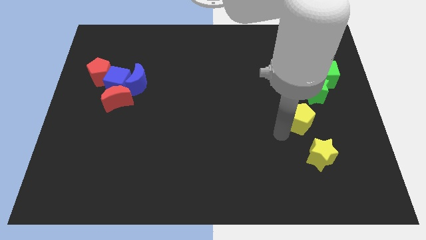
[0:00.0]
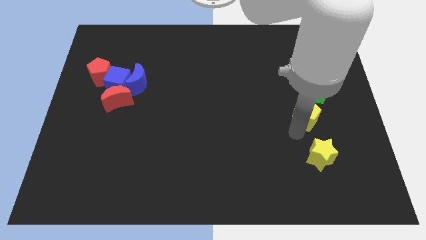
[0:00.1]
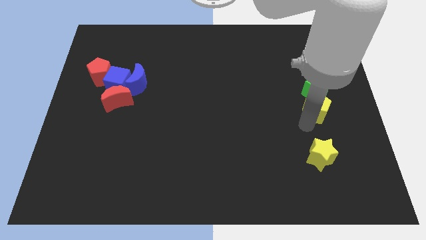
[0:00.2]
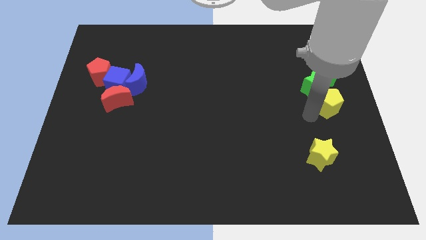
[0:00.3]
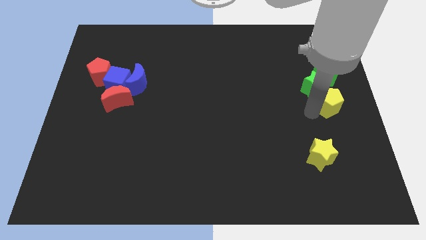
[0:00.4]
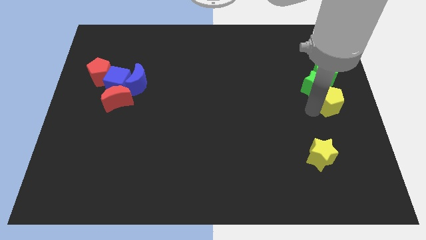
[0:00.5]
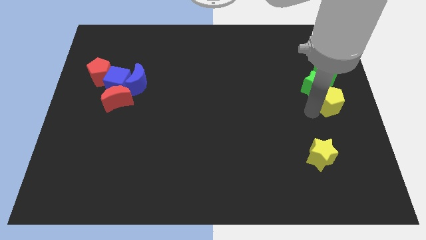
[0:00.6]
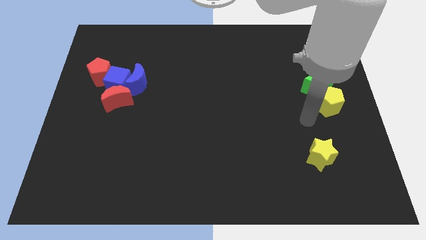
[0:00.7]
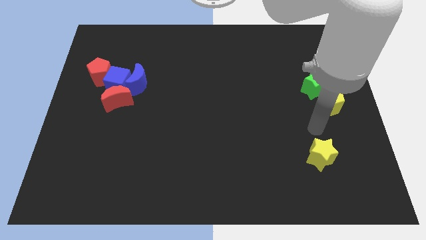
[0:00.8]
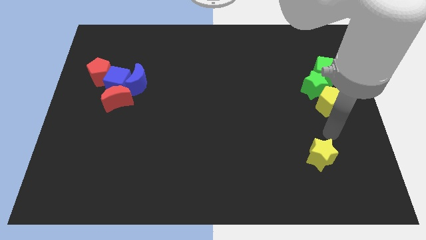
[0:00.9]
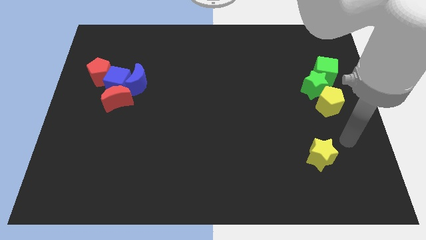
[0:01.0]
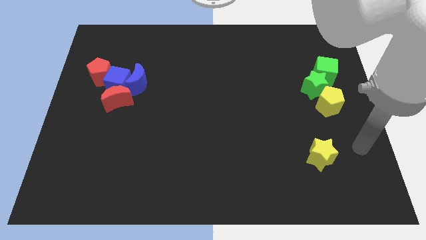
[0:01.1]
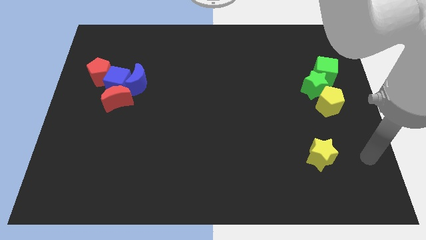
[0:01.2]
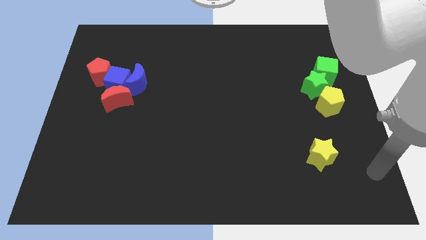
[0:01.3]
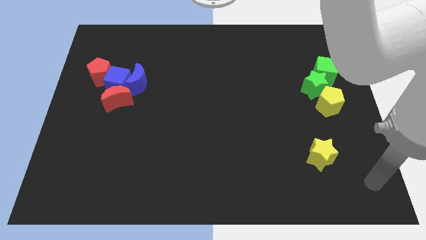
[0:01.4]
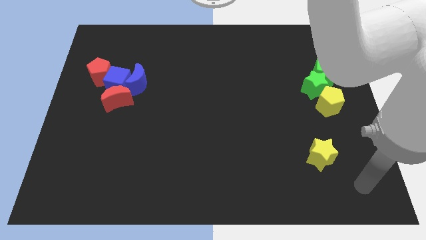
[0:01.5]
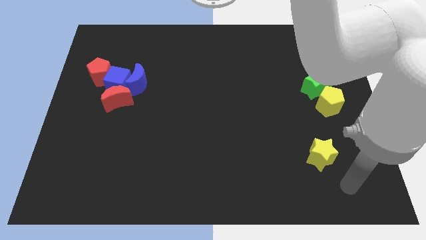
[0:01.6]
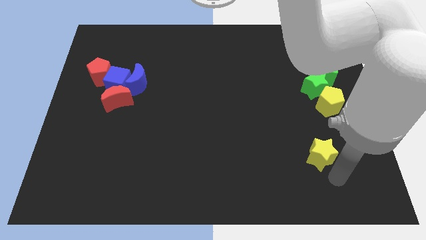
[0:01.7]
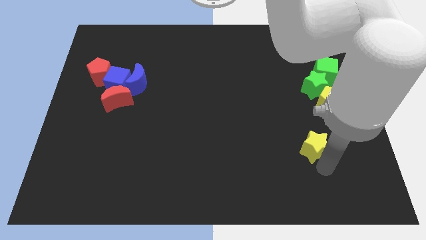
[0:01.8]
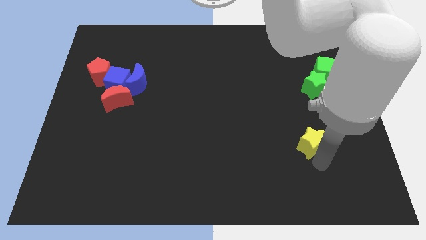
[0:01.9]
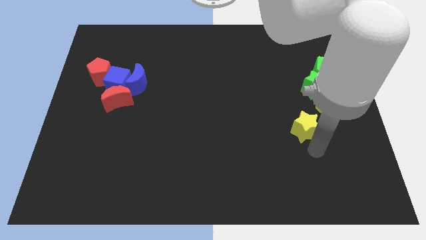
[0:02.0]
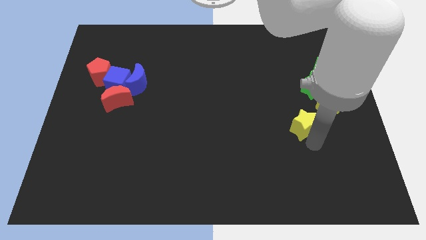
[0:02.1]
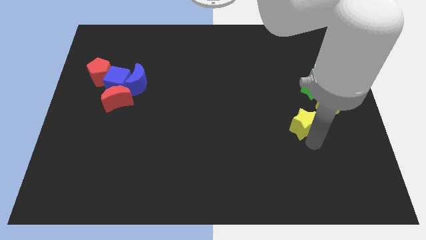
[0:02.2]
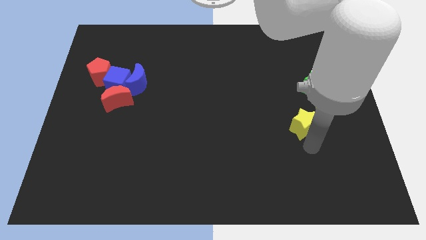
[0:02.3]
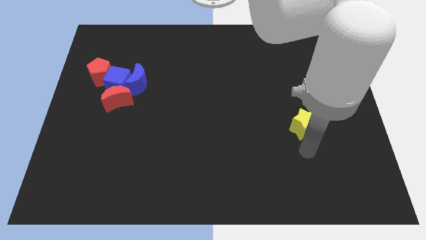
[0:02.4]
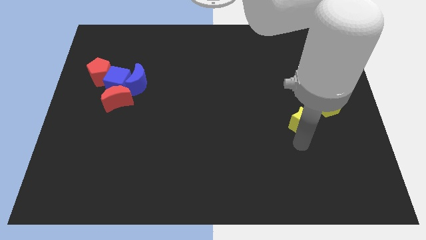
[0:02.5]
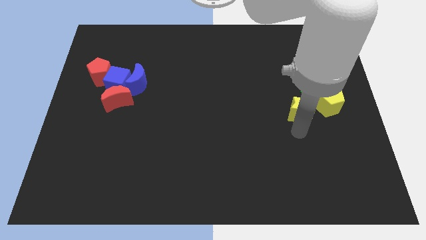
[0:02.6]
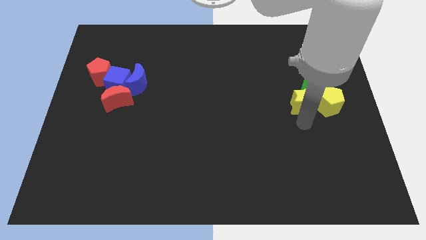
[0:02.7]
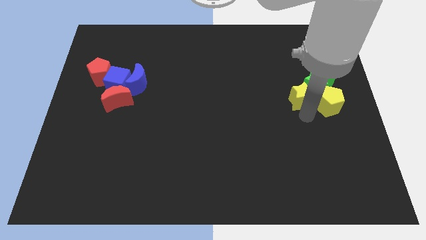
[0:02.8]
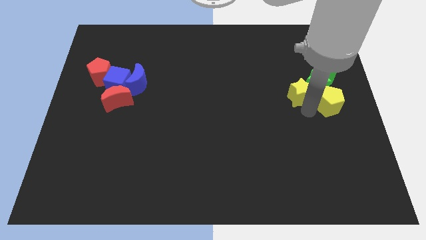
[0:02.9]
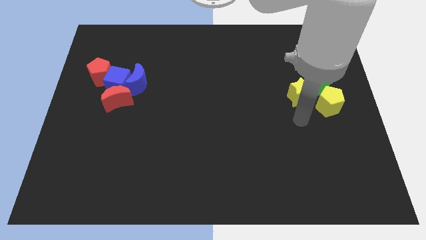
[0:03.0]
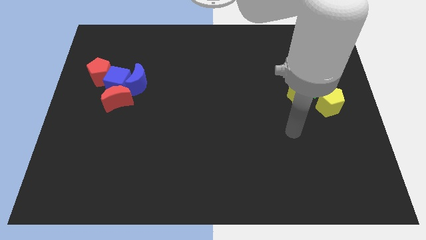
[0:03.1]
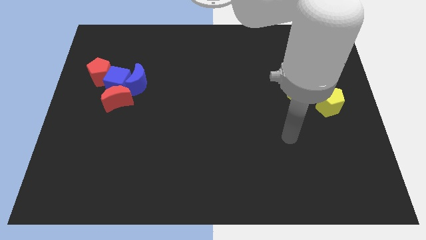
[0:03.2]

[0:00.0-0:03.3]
add the yellow blocks to the green blocks to form a group of blocks

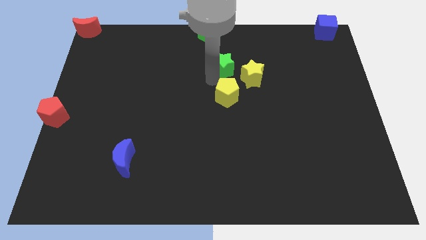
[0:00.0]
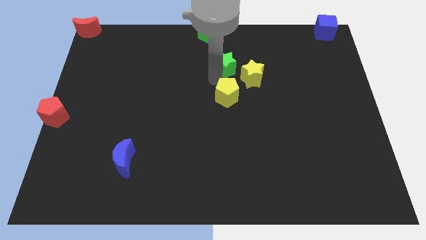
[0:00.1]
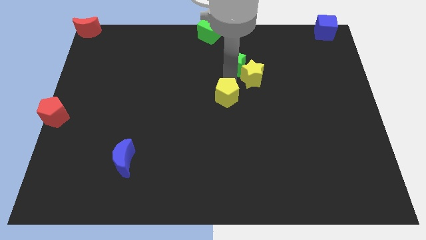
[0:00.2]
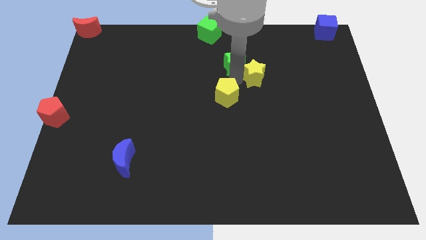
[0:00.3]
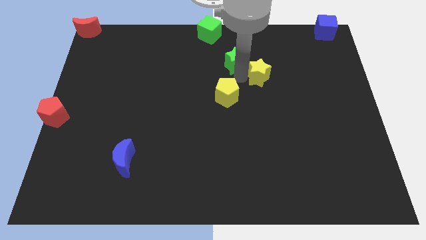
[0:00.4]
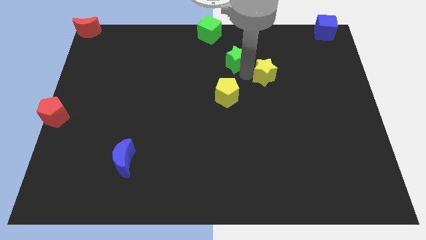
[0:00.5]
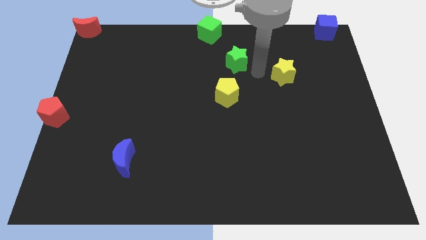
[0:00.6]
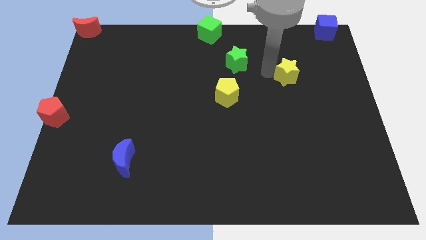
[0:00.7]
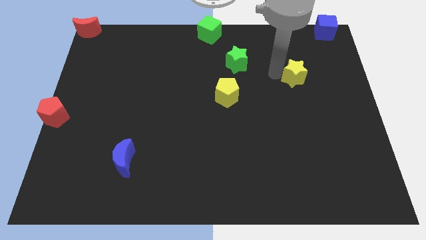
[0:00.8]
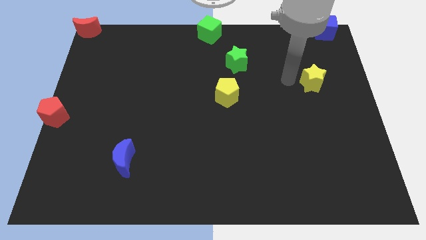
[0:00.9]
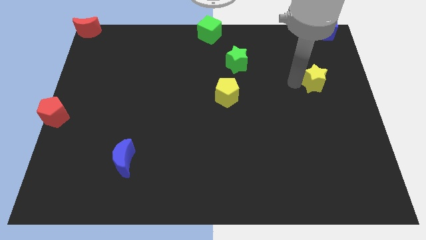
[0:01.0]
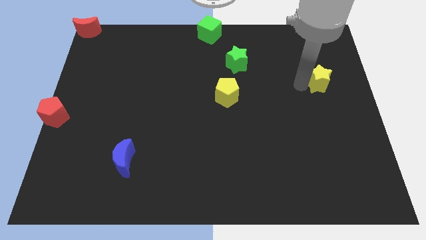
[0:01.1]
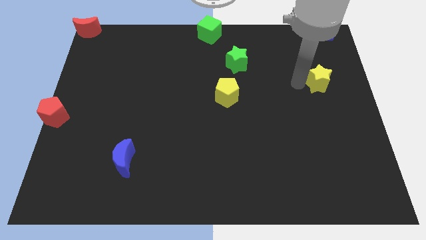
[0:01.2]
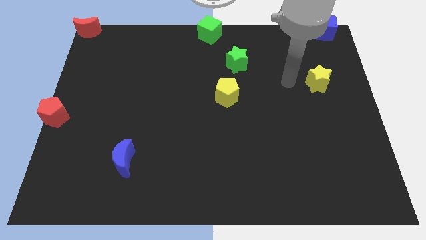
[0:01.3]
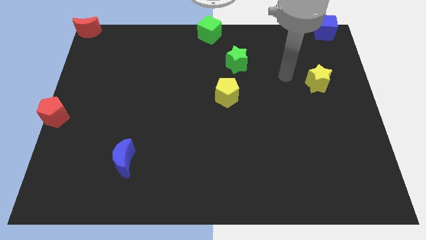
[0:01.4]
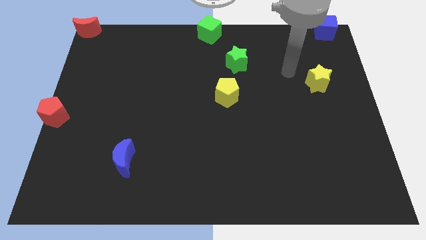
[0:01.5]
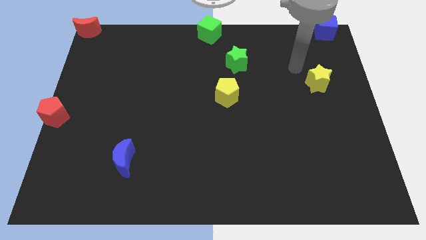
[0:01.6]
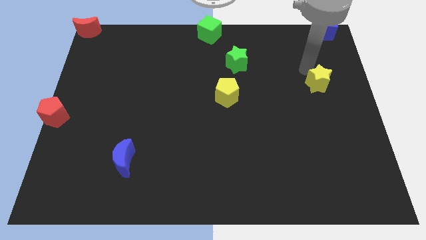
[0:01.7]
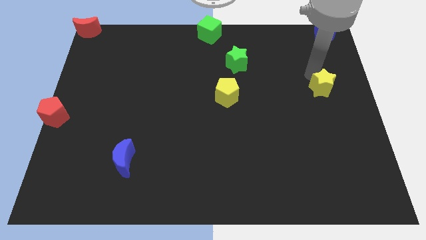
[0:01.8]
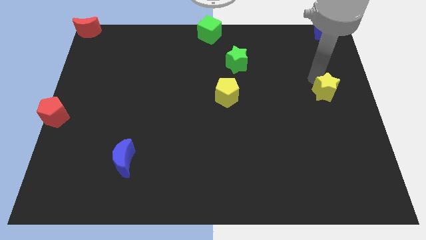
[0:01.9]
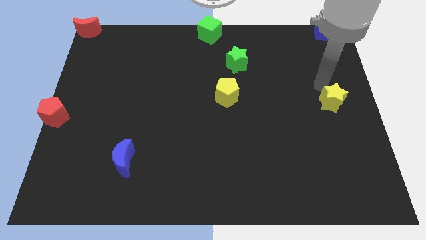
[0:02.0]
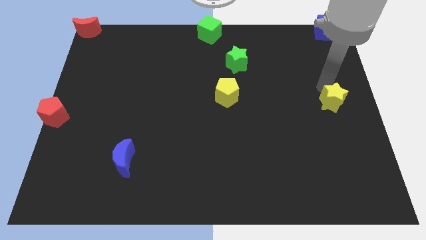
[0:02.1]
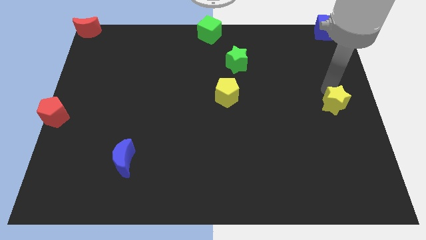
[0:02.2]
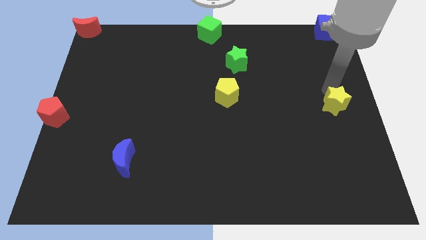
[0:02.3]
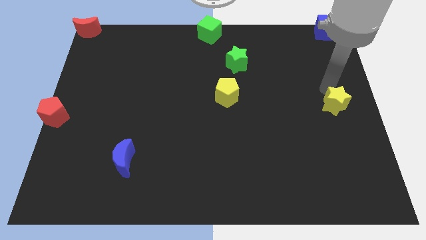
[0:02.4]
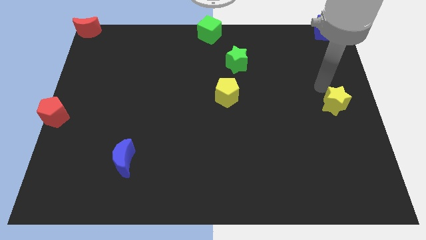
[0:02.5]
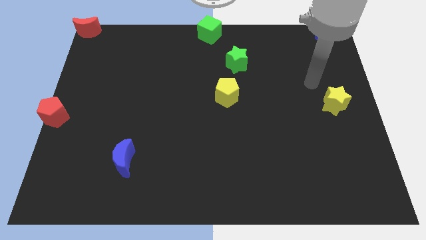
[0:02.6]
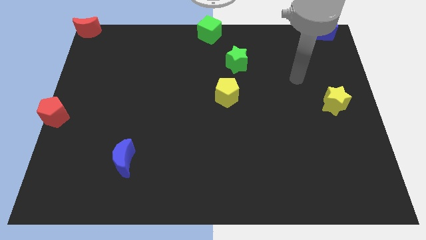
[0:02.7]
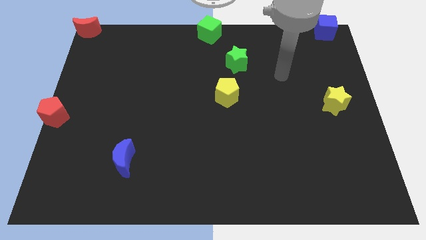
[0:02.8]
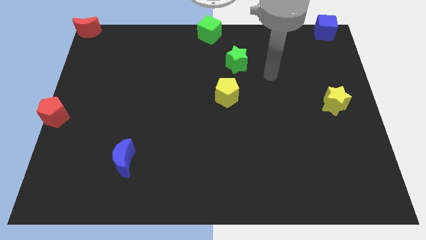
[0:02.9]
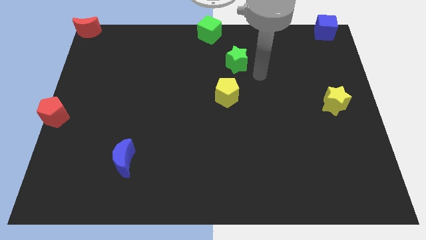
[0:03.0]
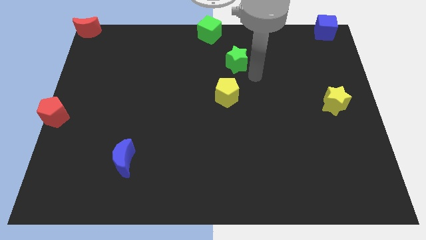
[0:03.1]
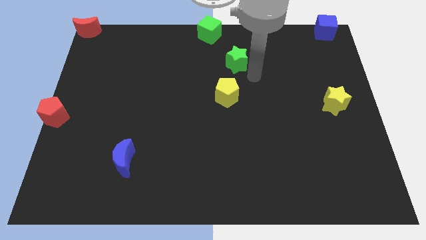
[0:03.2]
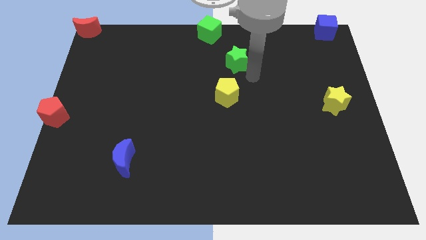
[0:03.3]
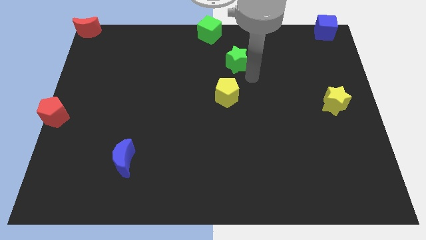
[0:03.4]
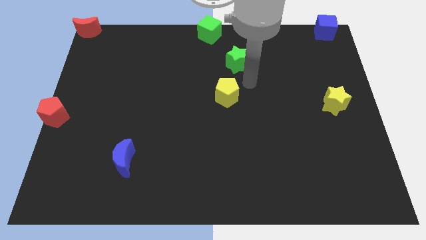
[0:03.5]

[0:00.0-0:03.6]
place the yellow star to the right centre of the board by seperating it from green star

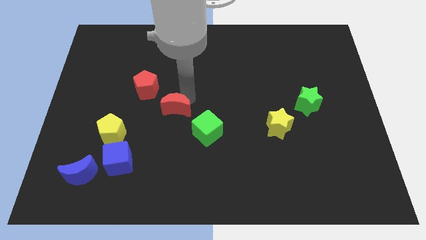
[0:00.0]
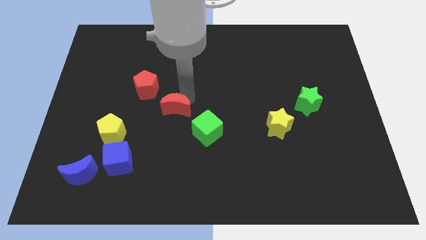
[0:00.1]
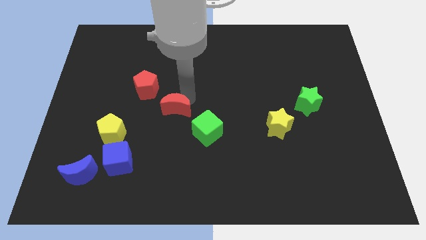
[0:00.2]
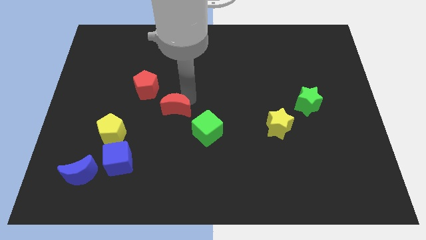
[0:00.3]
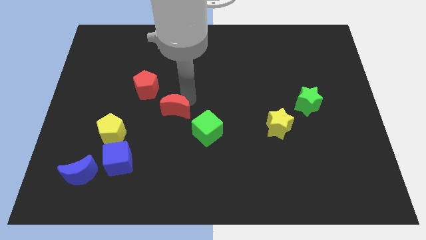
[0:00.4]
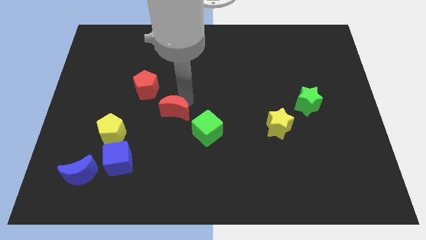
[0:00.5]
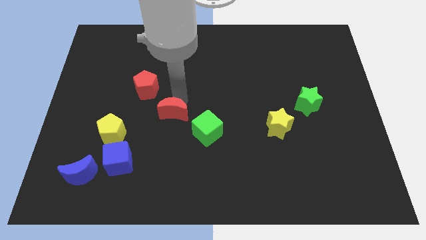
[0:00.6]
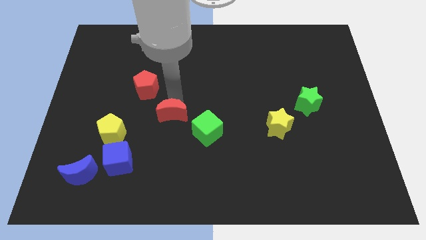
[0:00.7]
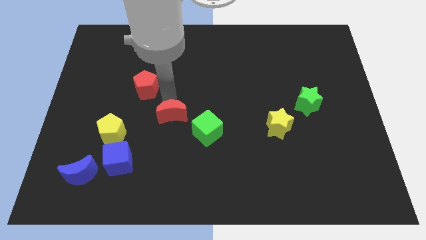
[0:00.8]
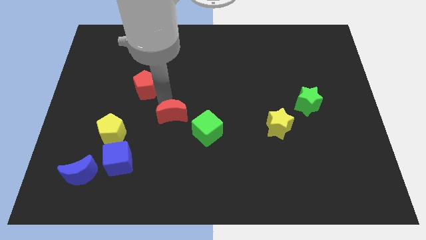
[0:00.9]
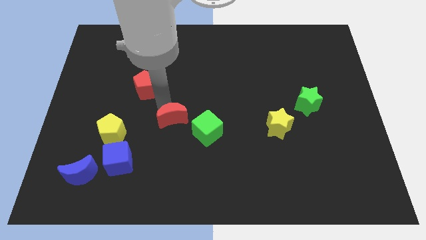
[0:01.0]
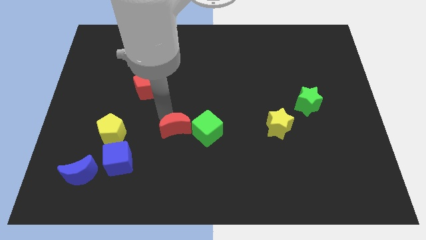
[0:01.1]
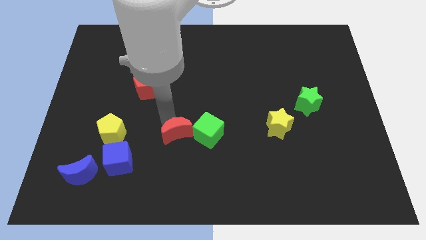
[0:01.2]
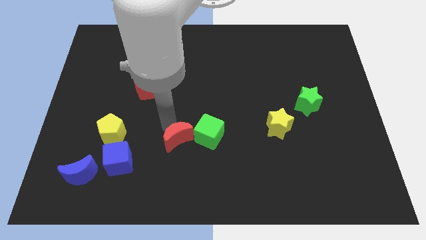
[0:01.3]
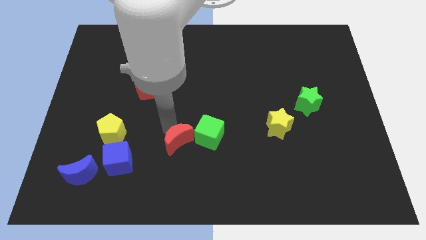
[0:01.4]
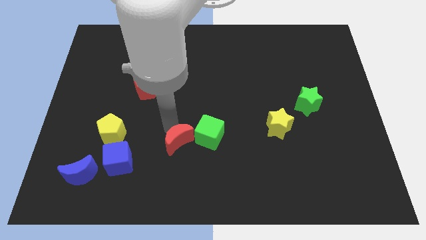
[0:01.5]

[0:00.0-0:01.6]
make the red crescent to touch the green cube

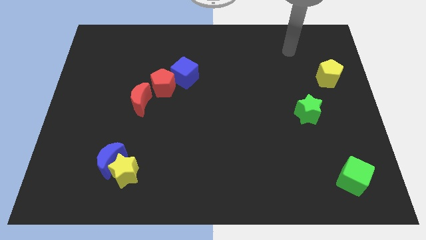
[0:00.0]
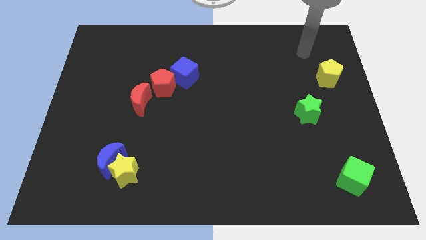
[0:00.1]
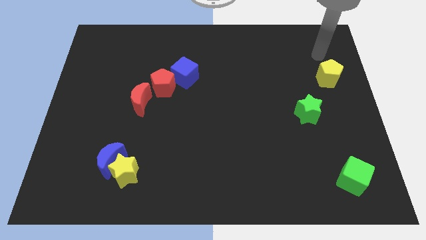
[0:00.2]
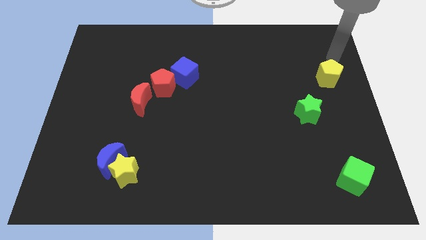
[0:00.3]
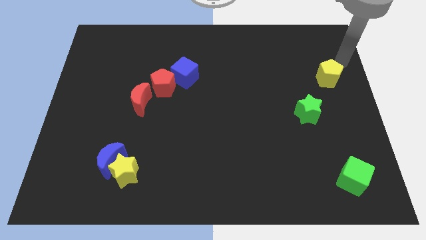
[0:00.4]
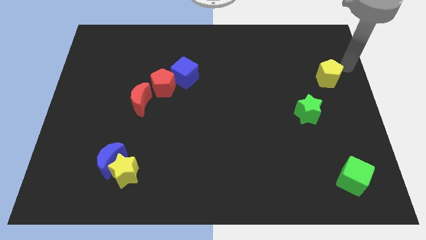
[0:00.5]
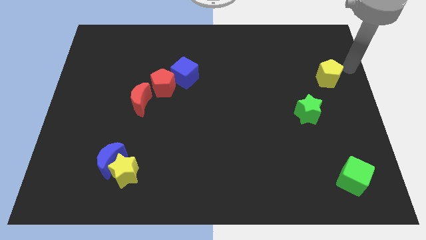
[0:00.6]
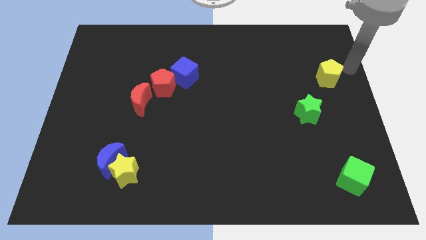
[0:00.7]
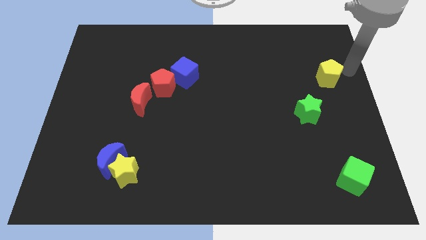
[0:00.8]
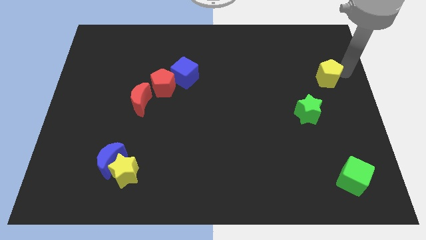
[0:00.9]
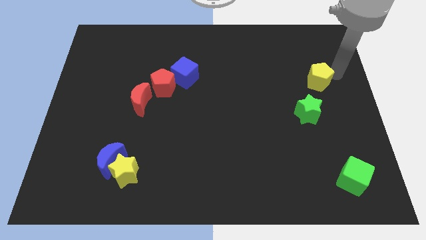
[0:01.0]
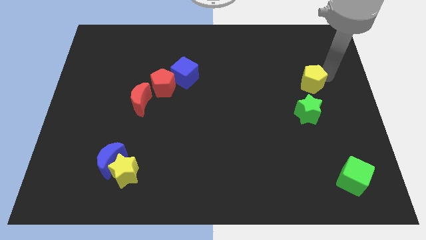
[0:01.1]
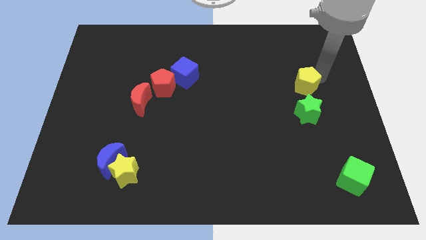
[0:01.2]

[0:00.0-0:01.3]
place the yellow pentagon above the green star
